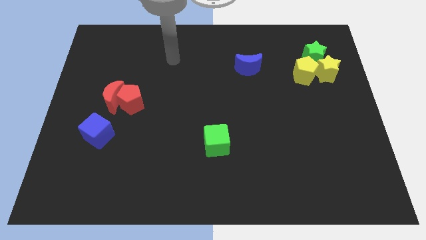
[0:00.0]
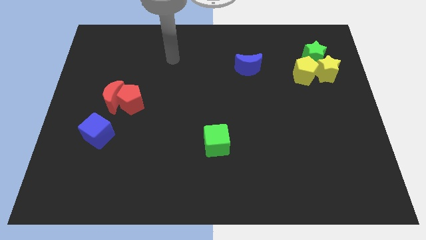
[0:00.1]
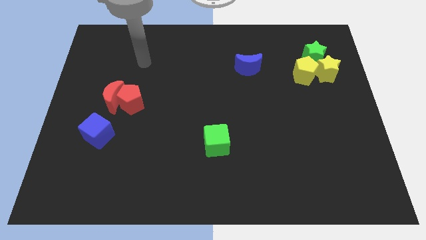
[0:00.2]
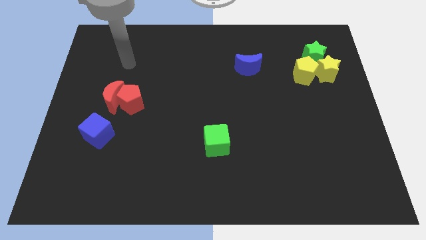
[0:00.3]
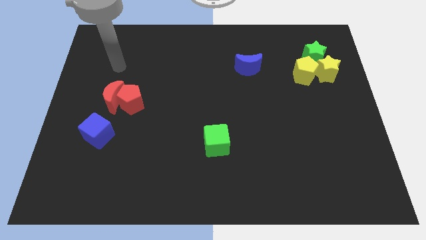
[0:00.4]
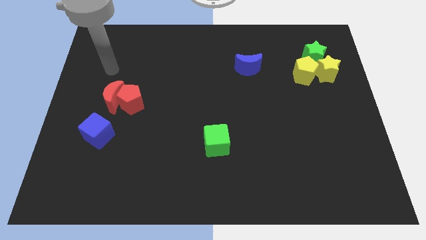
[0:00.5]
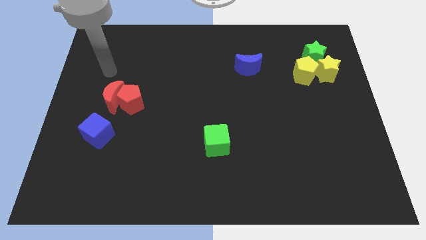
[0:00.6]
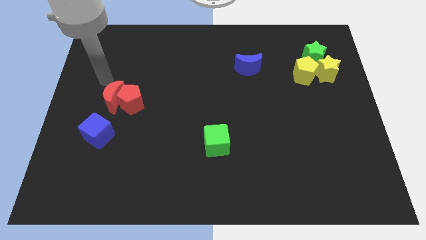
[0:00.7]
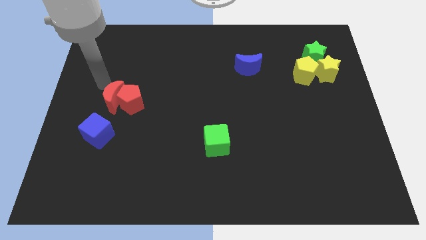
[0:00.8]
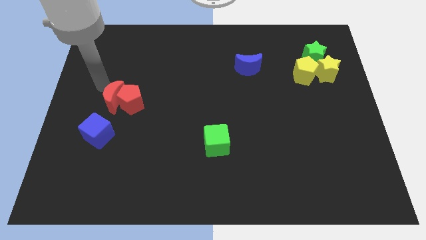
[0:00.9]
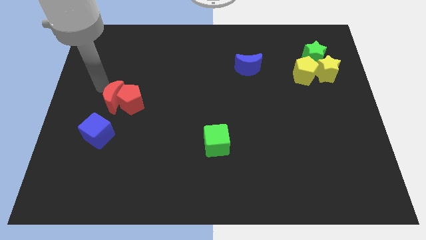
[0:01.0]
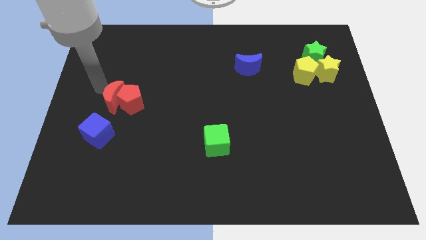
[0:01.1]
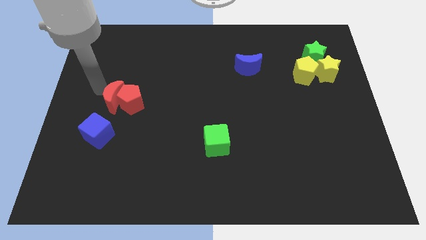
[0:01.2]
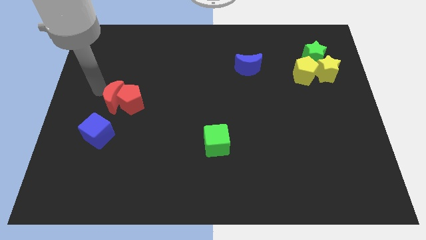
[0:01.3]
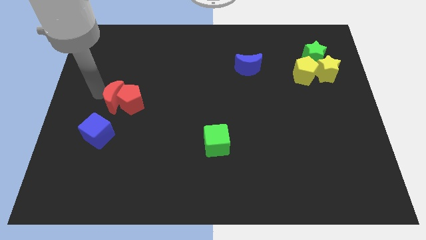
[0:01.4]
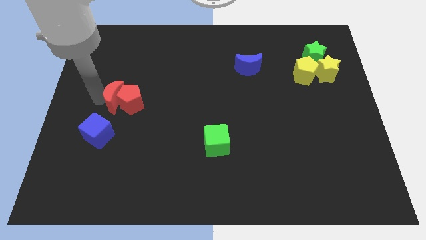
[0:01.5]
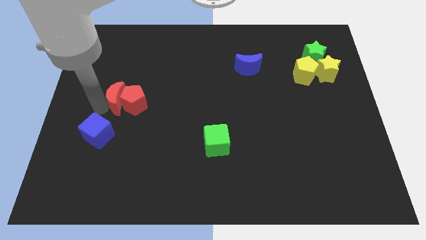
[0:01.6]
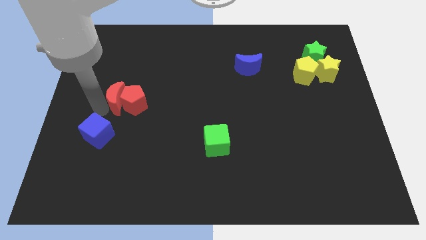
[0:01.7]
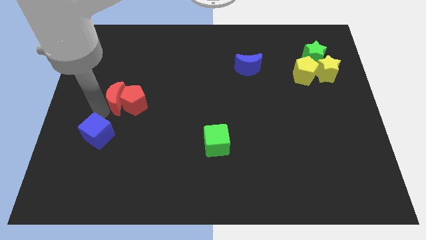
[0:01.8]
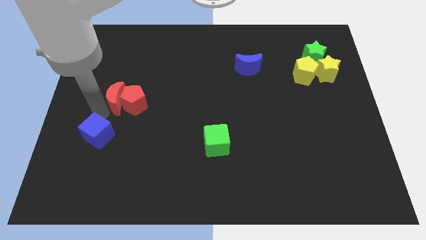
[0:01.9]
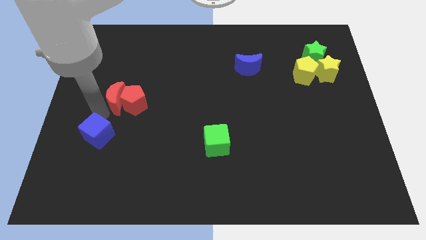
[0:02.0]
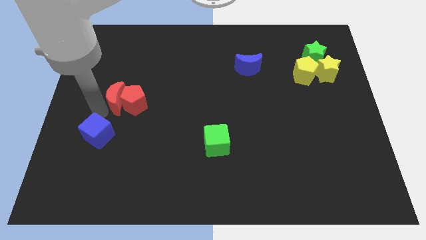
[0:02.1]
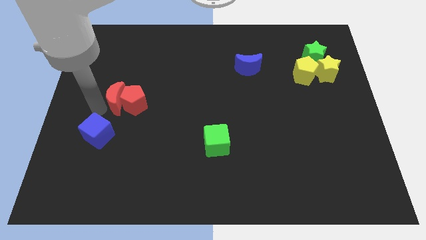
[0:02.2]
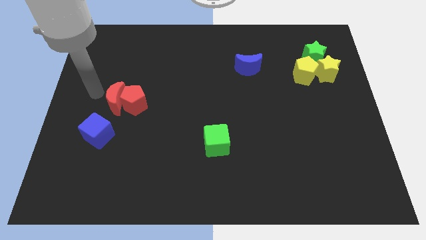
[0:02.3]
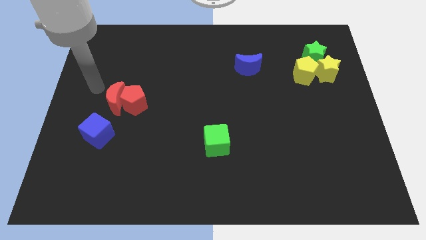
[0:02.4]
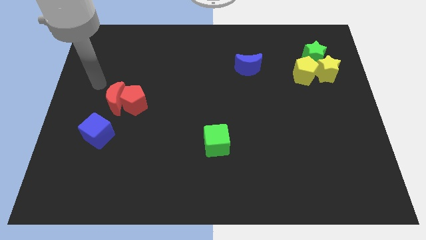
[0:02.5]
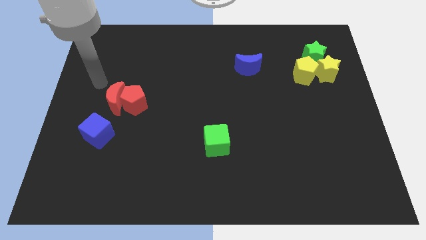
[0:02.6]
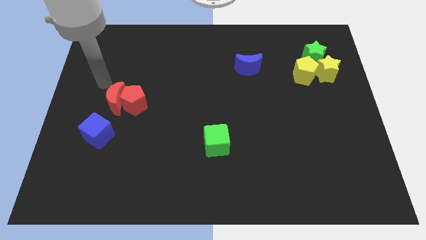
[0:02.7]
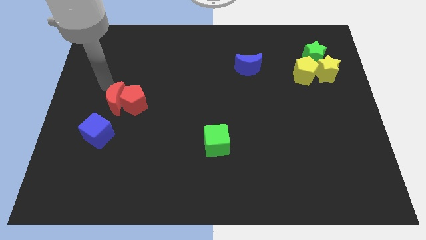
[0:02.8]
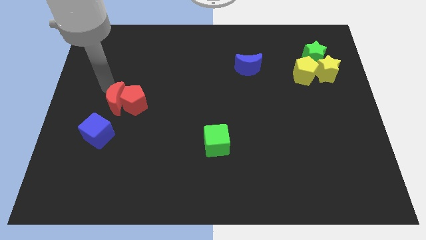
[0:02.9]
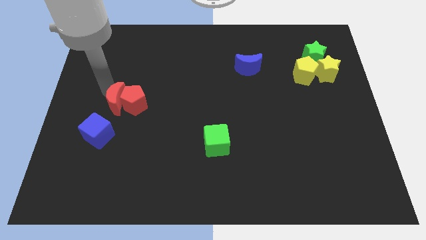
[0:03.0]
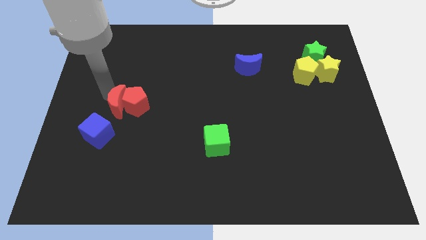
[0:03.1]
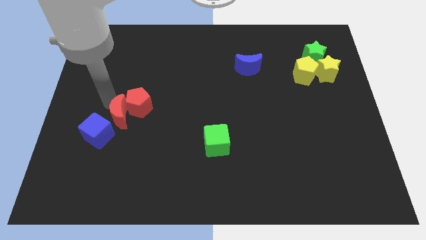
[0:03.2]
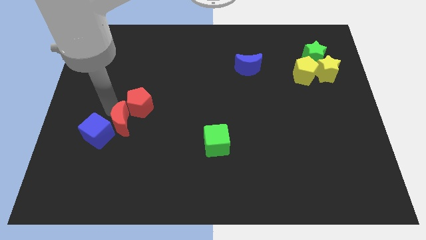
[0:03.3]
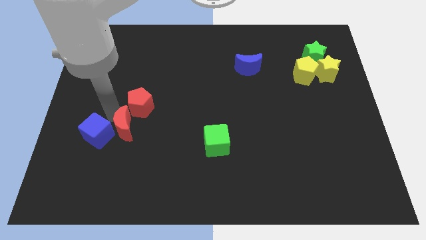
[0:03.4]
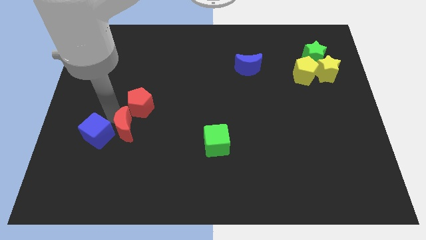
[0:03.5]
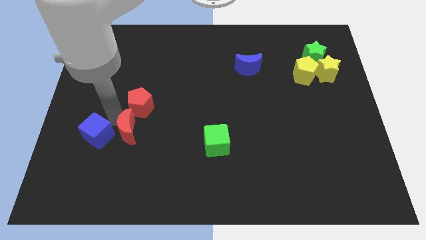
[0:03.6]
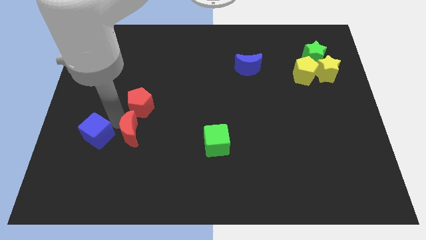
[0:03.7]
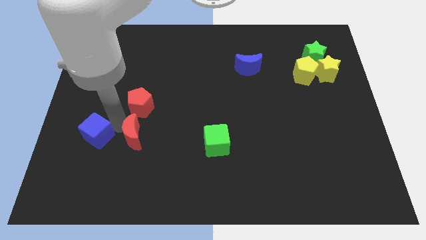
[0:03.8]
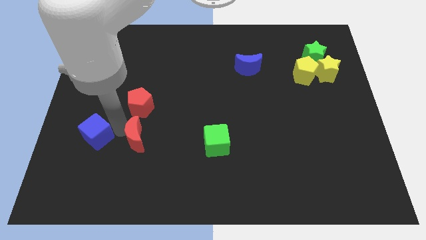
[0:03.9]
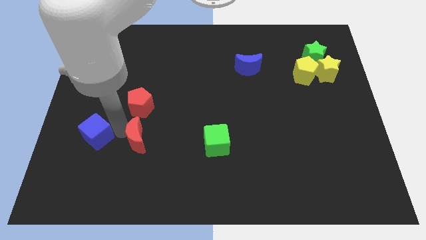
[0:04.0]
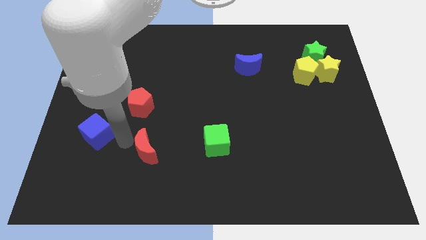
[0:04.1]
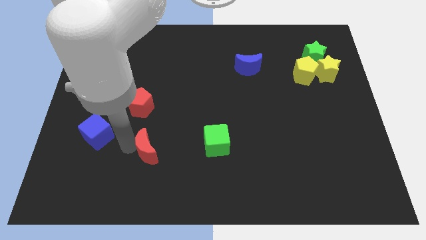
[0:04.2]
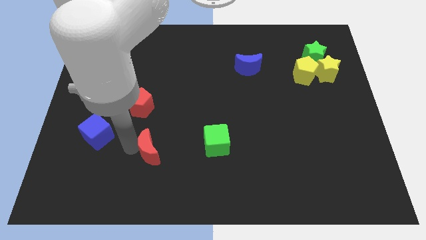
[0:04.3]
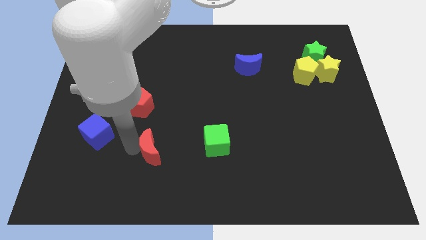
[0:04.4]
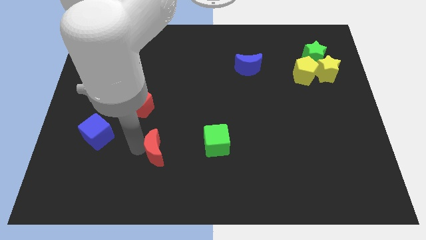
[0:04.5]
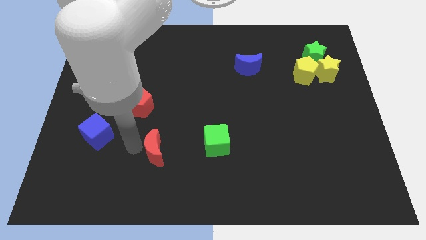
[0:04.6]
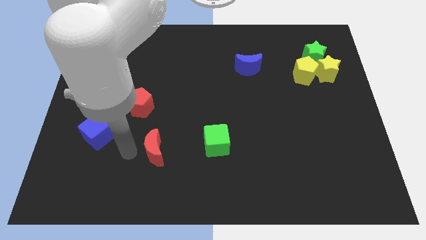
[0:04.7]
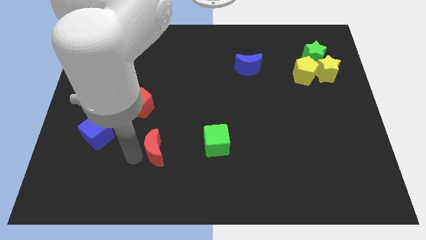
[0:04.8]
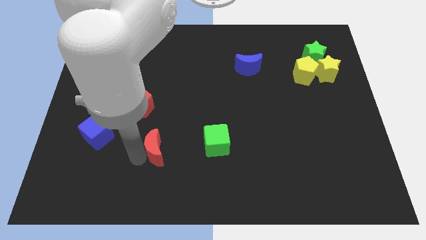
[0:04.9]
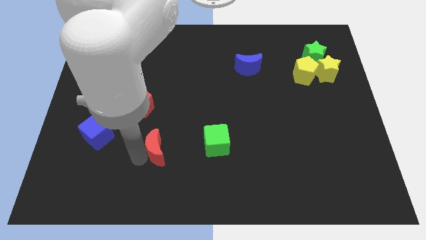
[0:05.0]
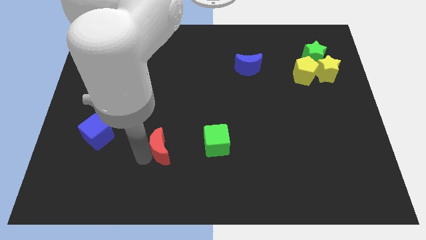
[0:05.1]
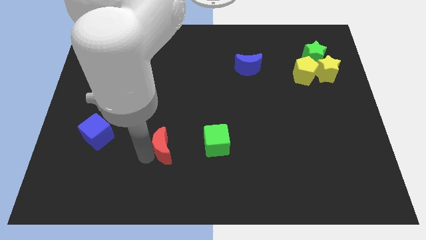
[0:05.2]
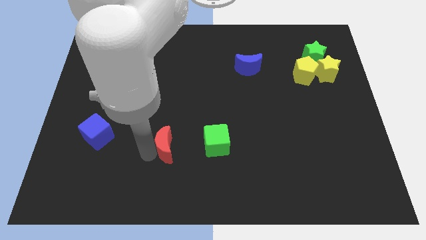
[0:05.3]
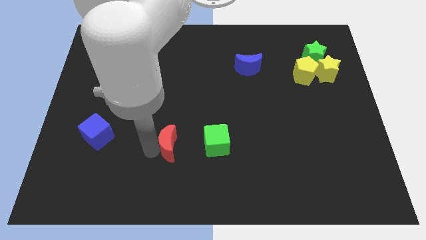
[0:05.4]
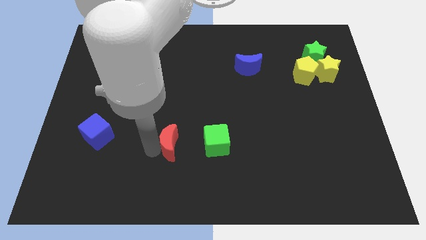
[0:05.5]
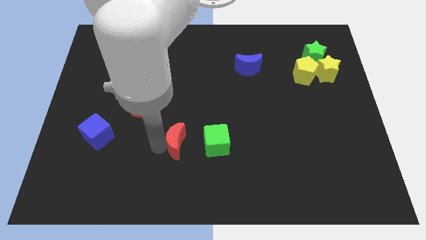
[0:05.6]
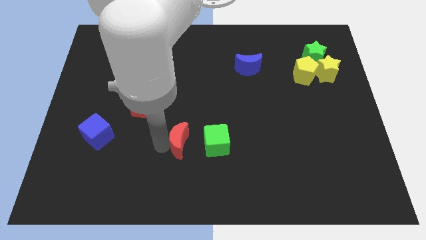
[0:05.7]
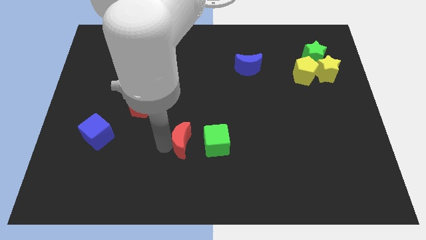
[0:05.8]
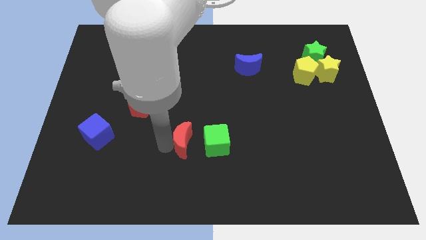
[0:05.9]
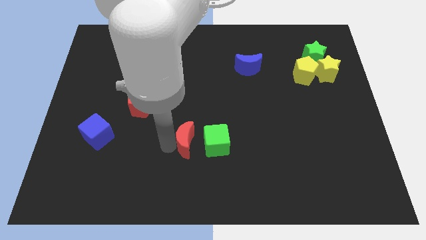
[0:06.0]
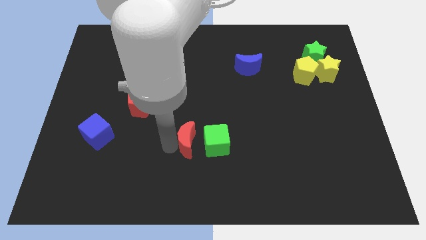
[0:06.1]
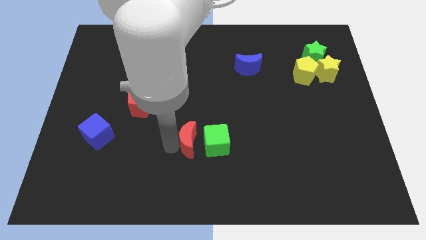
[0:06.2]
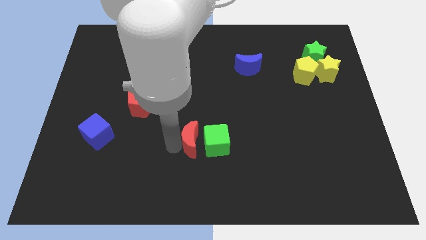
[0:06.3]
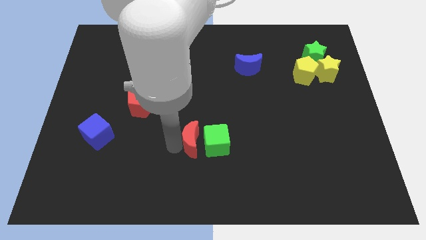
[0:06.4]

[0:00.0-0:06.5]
put the red moon to the green cube

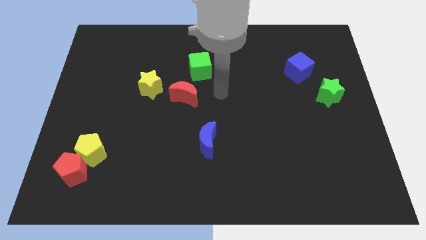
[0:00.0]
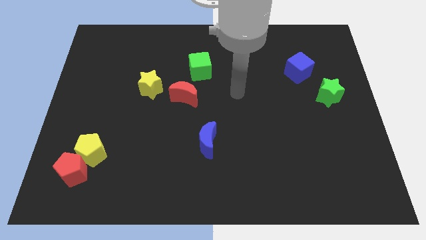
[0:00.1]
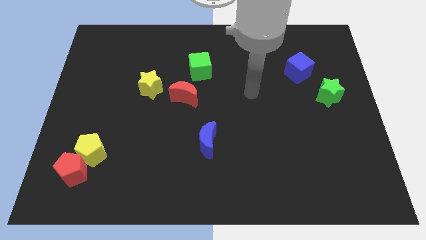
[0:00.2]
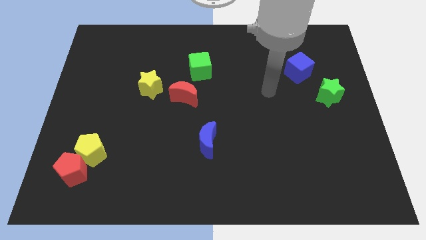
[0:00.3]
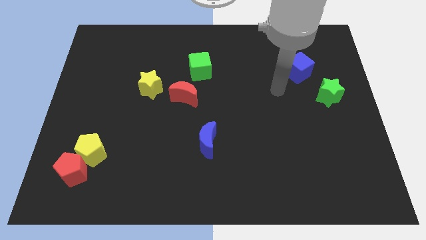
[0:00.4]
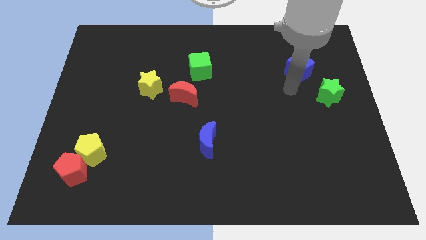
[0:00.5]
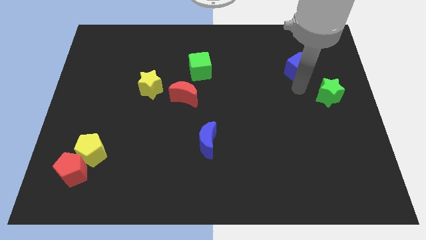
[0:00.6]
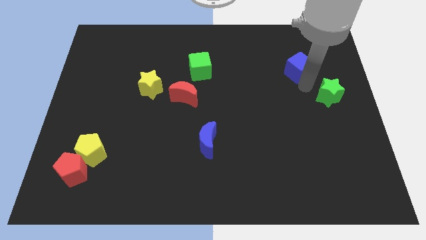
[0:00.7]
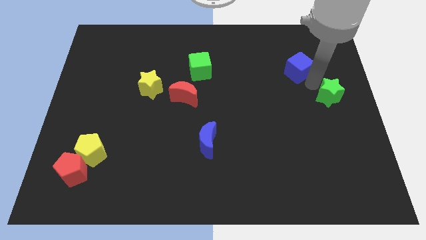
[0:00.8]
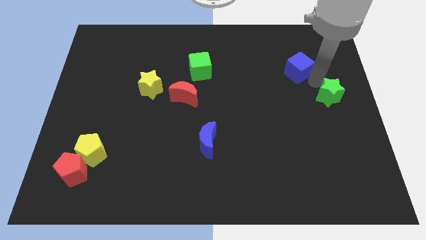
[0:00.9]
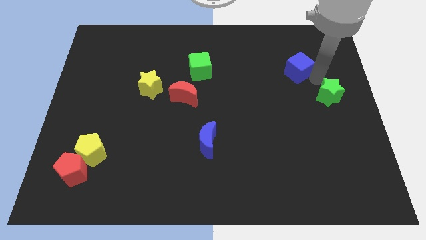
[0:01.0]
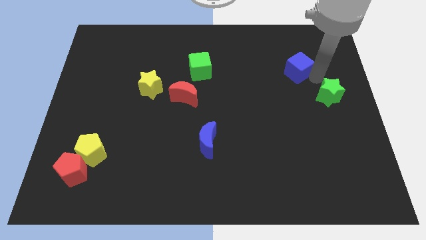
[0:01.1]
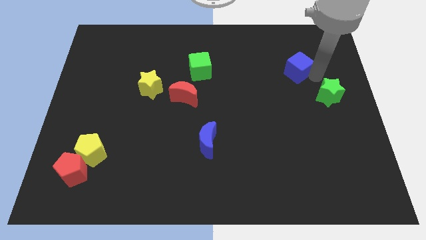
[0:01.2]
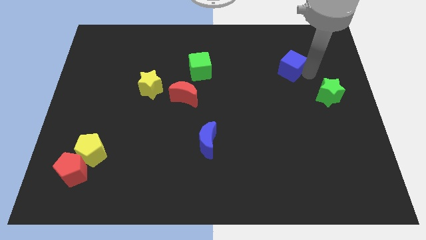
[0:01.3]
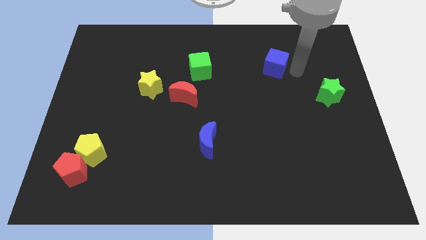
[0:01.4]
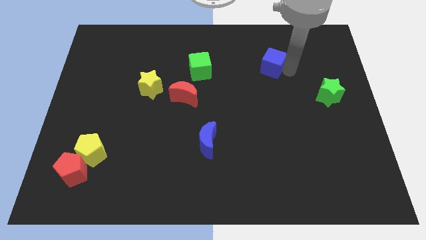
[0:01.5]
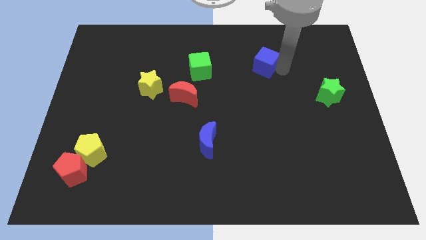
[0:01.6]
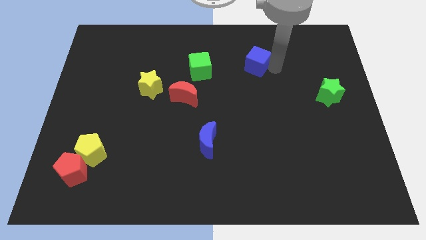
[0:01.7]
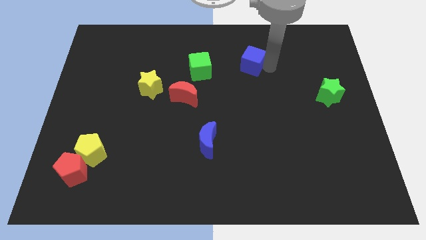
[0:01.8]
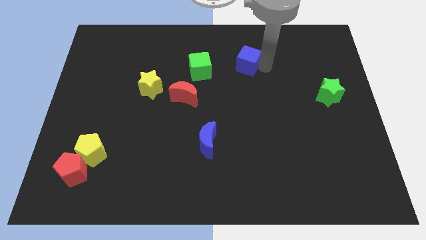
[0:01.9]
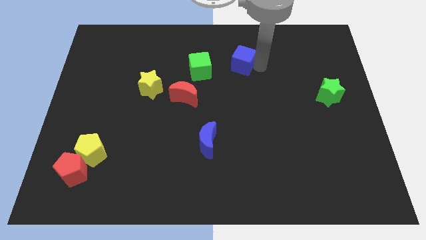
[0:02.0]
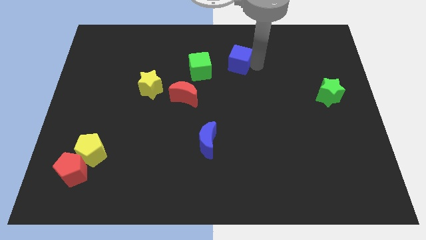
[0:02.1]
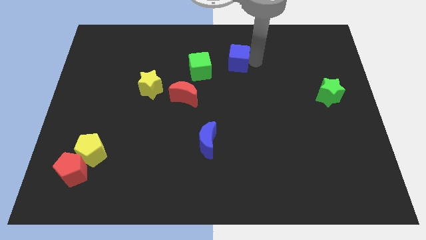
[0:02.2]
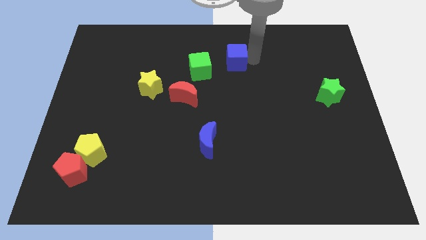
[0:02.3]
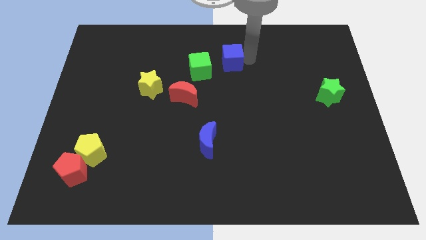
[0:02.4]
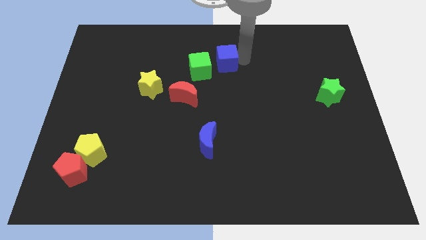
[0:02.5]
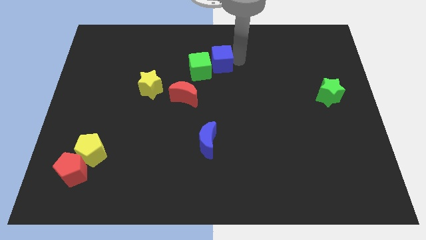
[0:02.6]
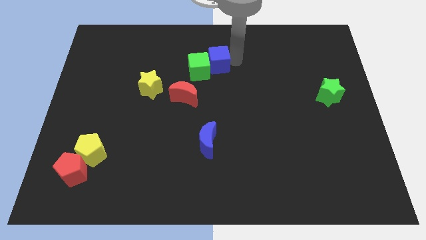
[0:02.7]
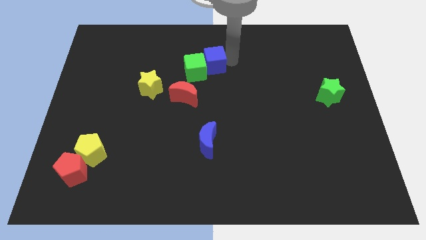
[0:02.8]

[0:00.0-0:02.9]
move the blue cube towards the green cube
